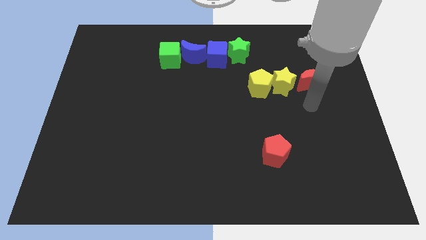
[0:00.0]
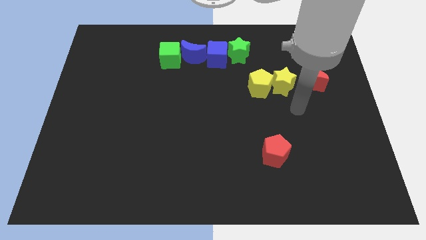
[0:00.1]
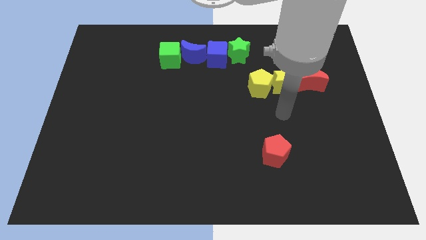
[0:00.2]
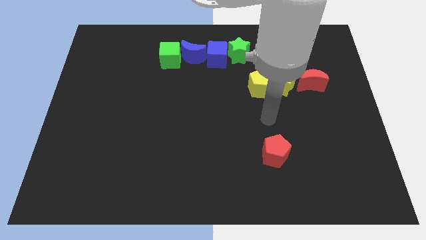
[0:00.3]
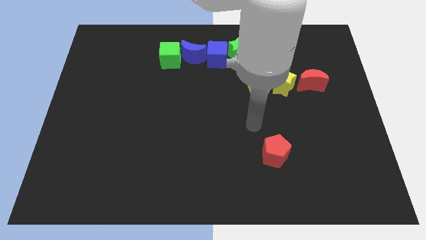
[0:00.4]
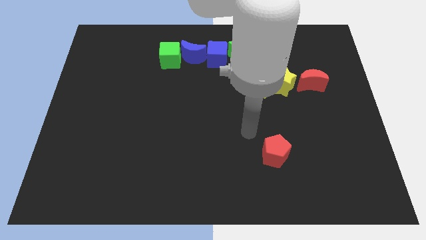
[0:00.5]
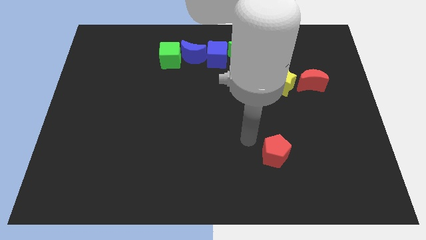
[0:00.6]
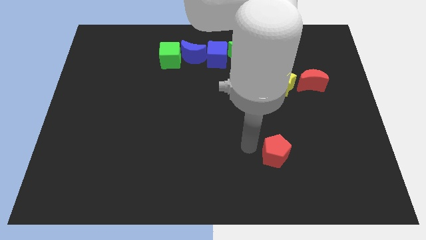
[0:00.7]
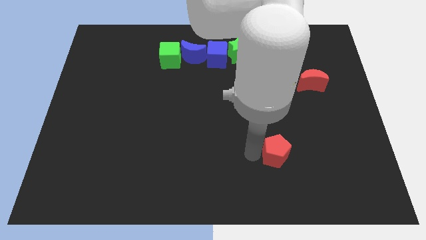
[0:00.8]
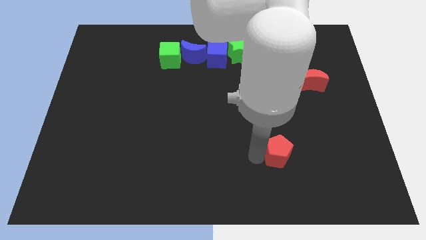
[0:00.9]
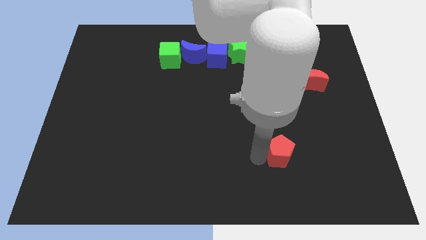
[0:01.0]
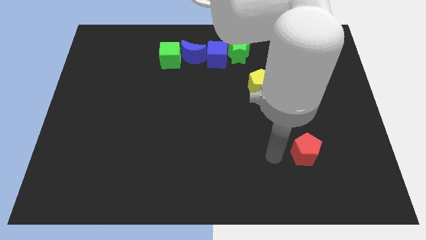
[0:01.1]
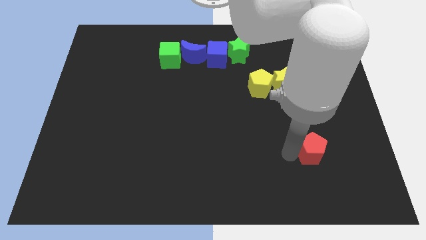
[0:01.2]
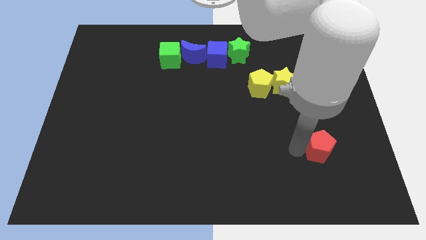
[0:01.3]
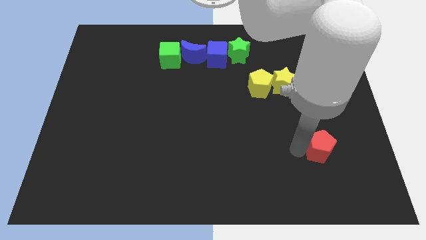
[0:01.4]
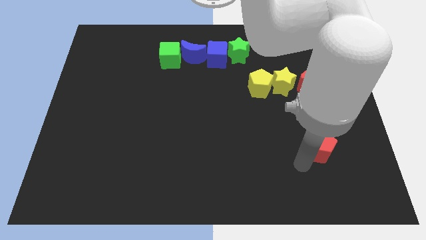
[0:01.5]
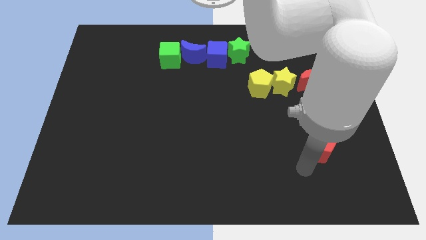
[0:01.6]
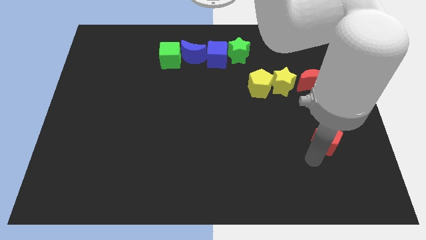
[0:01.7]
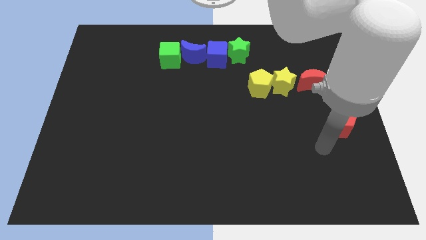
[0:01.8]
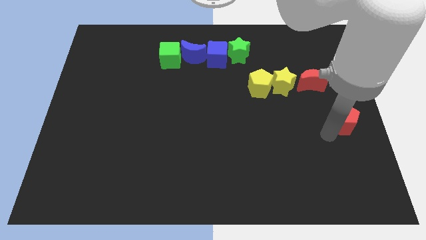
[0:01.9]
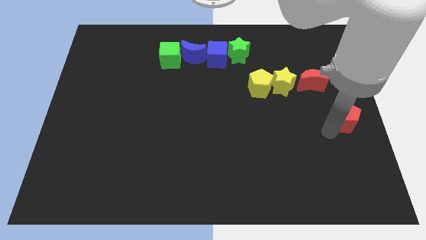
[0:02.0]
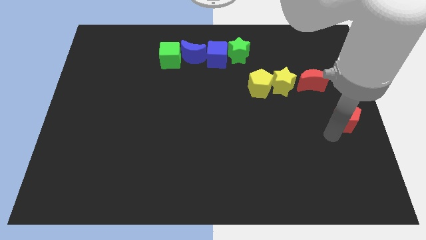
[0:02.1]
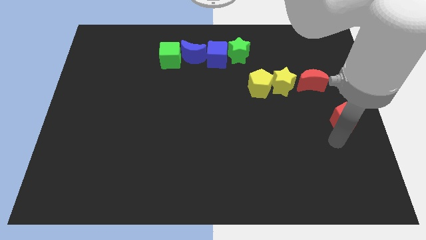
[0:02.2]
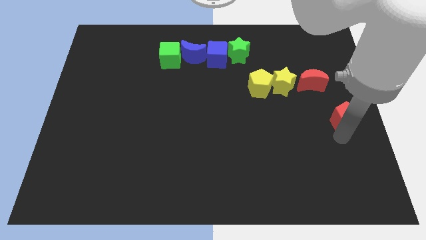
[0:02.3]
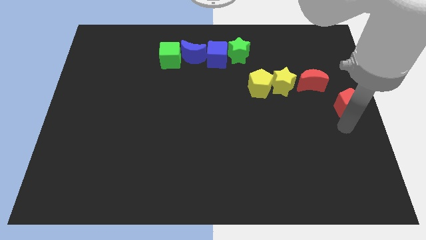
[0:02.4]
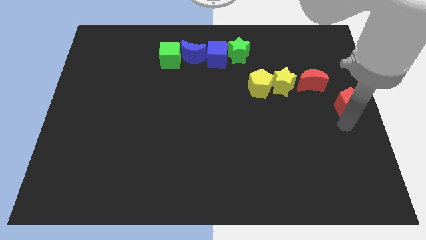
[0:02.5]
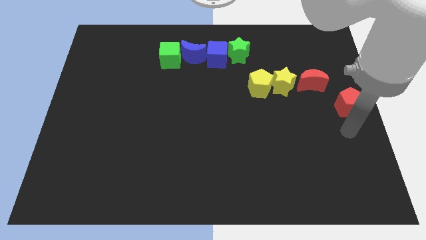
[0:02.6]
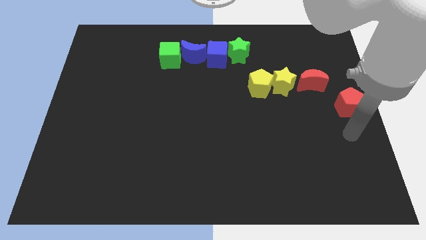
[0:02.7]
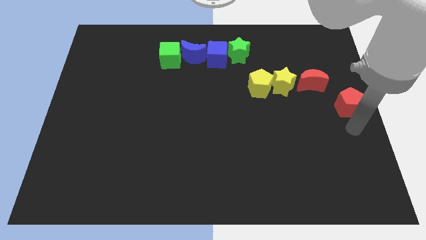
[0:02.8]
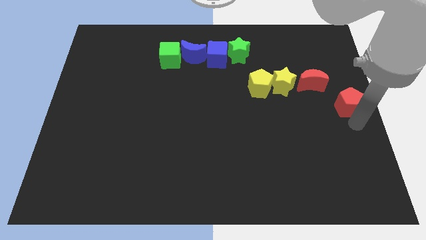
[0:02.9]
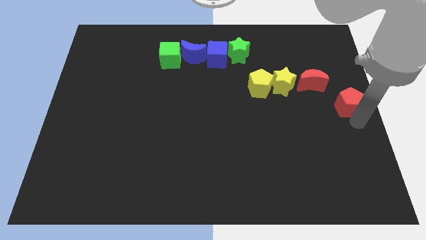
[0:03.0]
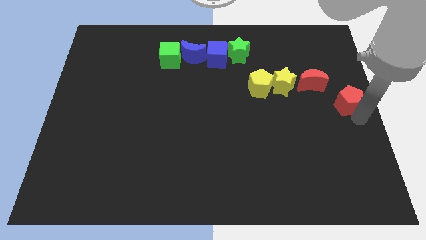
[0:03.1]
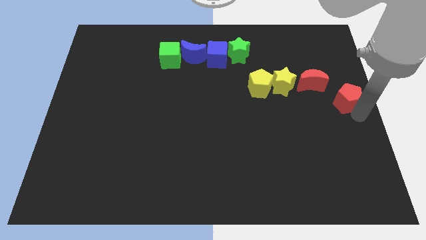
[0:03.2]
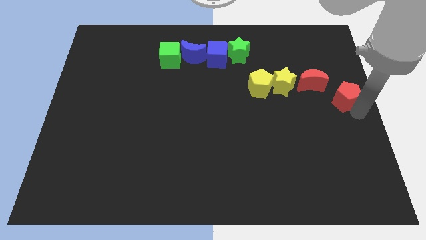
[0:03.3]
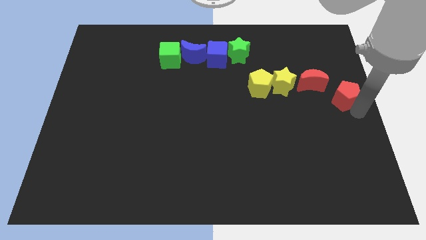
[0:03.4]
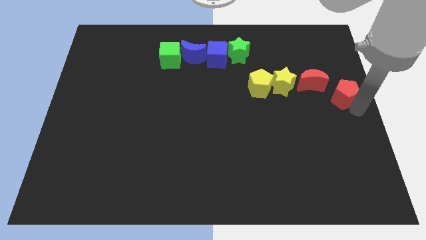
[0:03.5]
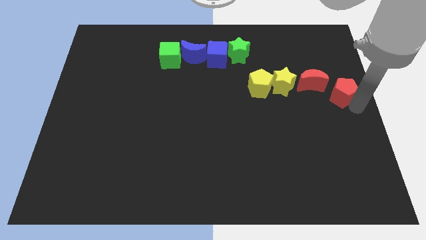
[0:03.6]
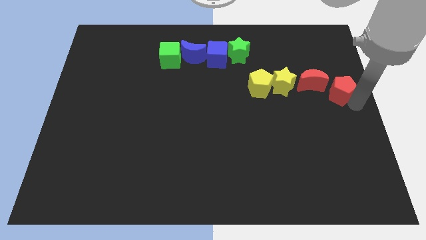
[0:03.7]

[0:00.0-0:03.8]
push the red pentagon towards the red crescent

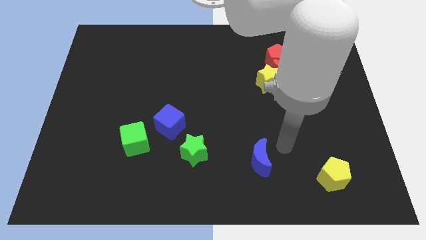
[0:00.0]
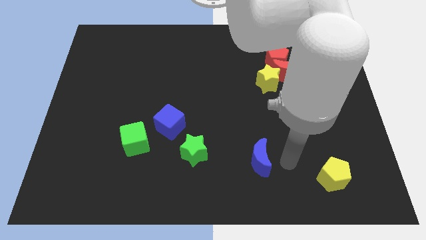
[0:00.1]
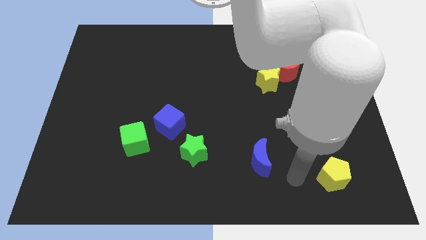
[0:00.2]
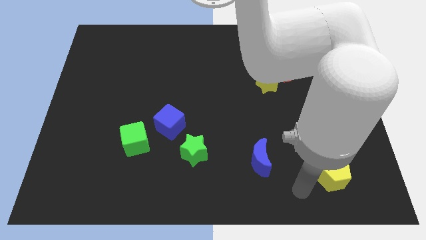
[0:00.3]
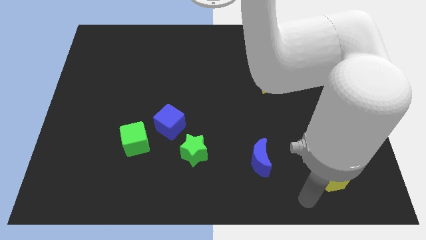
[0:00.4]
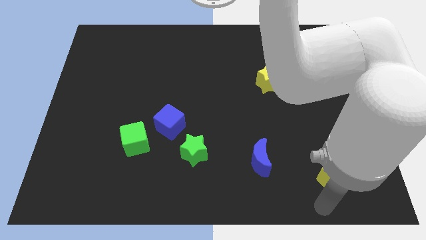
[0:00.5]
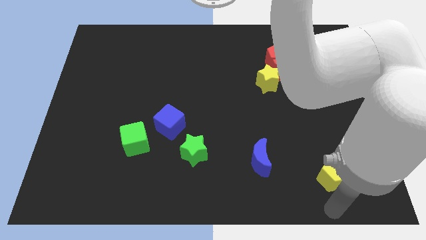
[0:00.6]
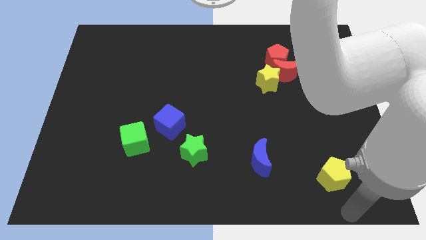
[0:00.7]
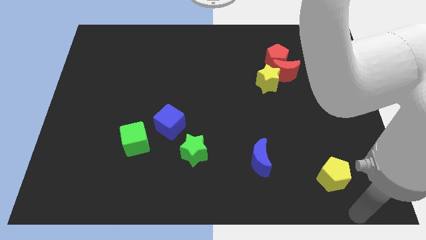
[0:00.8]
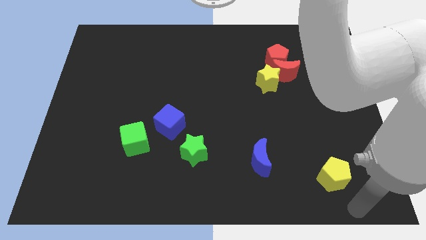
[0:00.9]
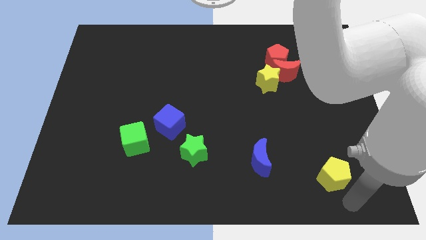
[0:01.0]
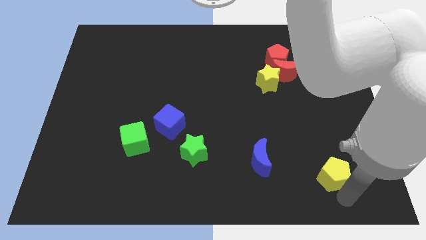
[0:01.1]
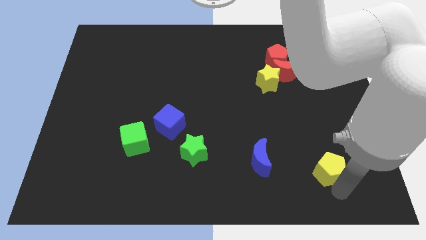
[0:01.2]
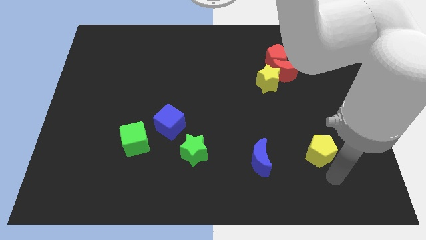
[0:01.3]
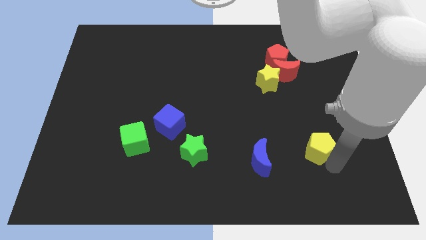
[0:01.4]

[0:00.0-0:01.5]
place the yellow pentagon to the right of the blue moon

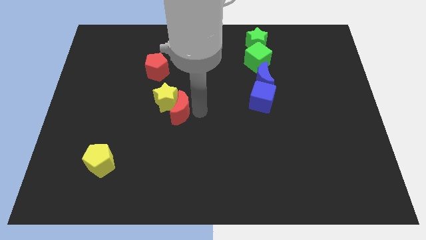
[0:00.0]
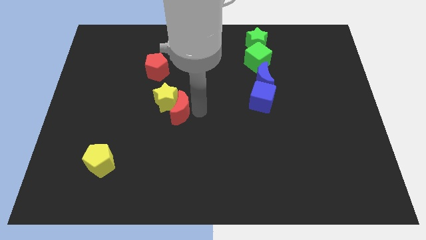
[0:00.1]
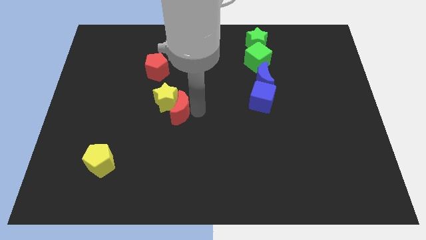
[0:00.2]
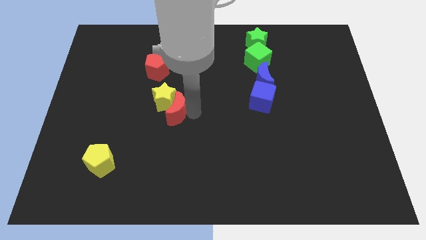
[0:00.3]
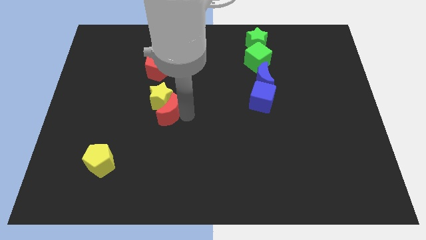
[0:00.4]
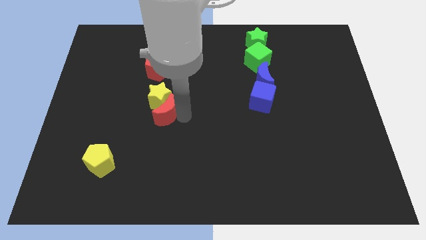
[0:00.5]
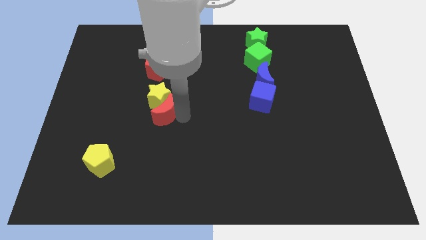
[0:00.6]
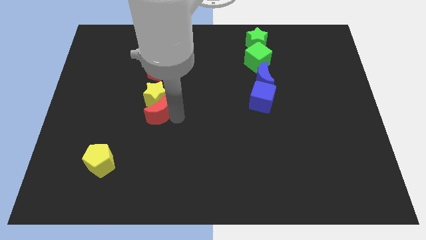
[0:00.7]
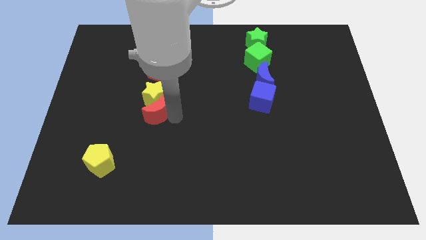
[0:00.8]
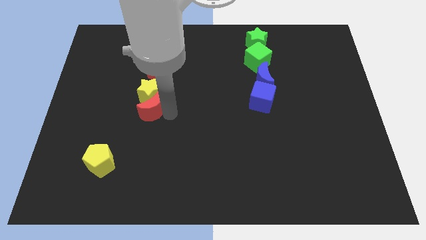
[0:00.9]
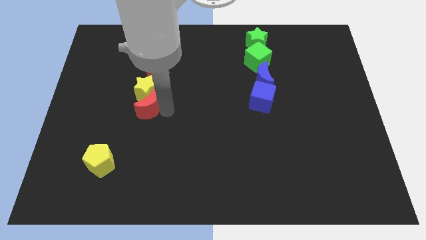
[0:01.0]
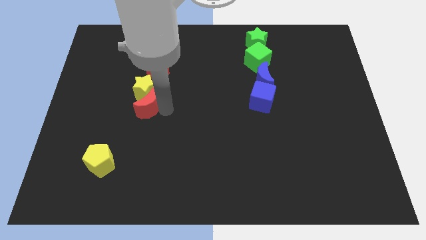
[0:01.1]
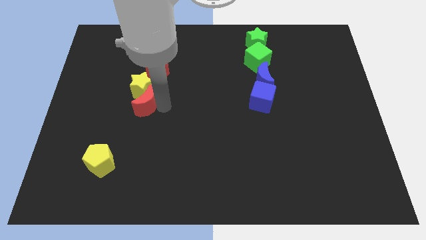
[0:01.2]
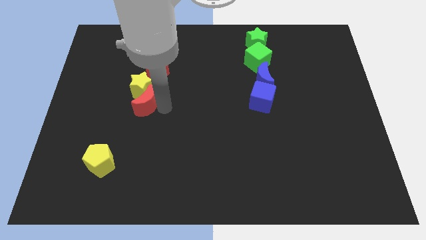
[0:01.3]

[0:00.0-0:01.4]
move the yellow star and red moon to the bottom of the red pentagon

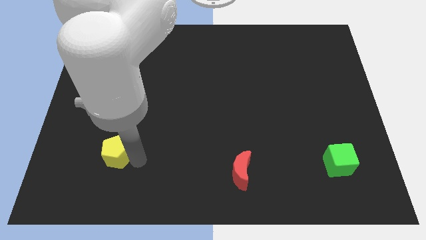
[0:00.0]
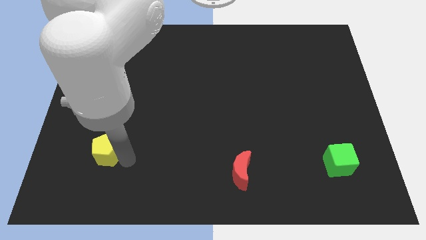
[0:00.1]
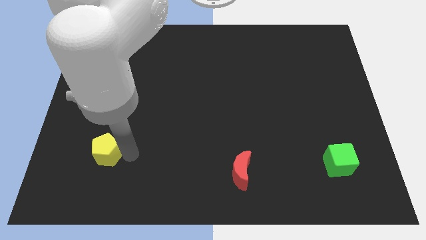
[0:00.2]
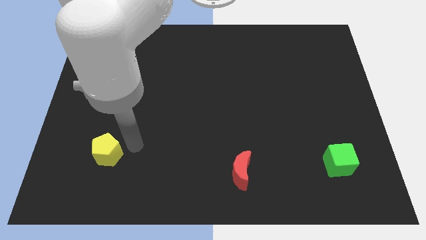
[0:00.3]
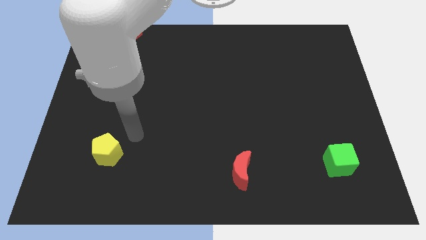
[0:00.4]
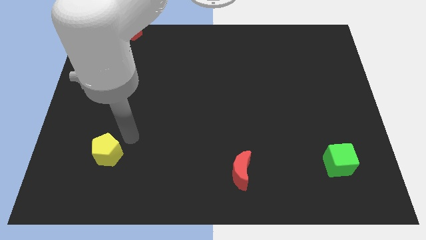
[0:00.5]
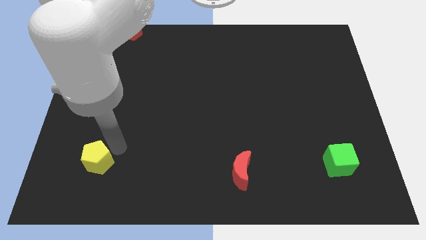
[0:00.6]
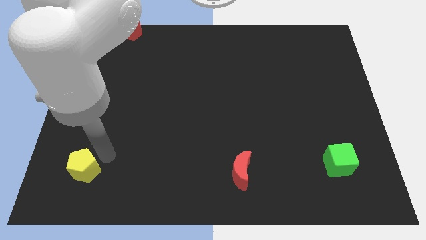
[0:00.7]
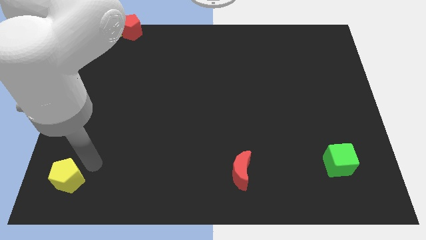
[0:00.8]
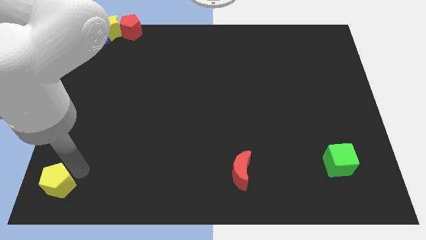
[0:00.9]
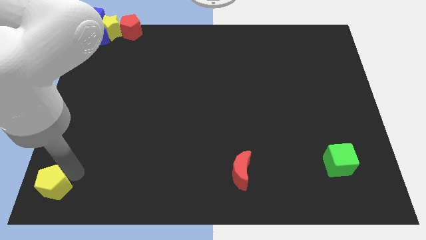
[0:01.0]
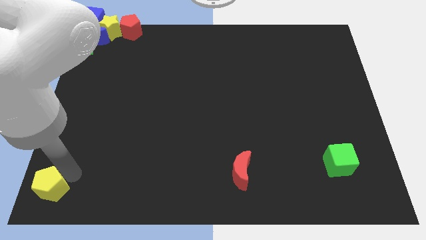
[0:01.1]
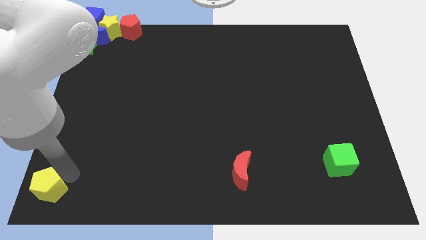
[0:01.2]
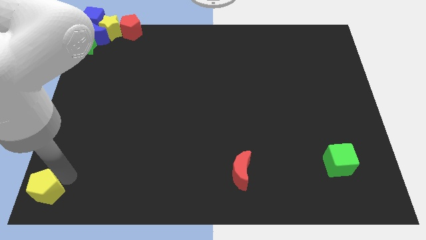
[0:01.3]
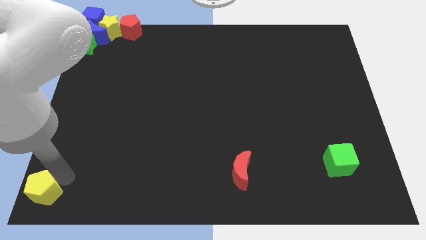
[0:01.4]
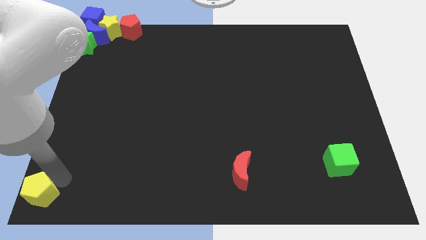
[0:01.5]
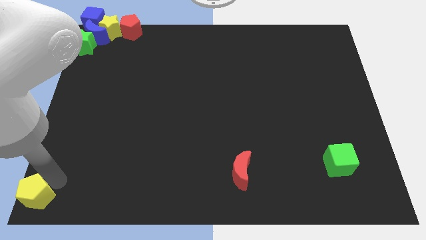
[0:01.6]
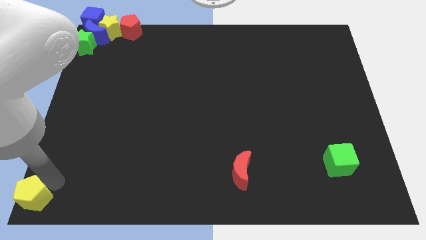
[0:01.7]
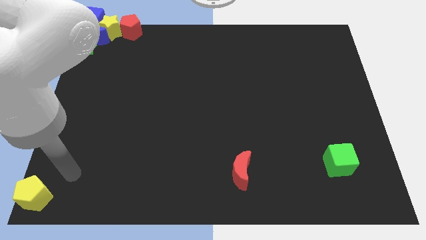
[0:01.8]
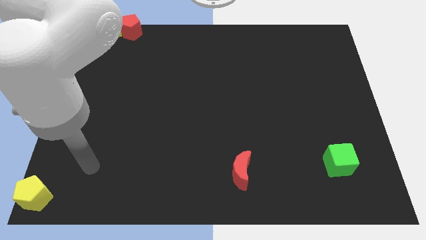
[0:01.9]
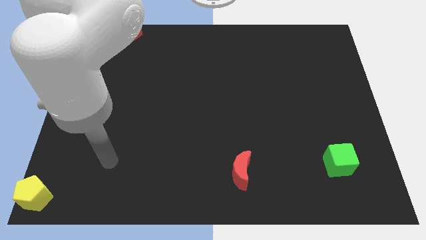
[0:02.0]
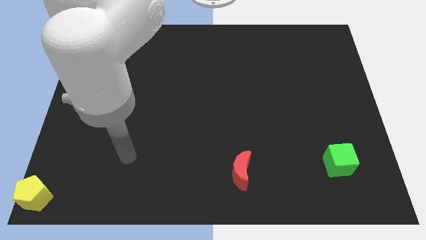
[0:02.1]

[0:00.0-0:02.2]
move the yellow pentagon to the bottom left of the board
